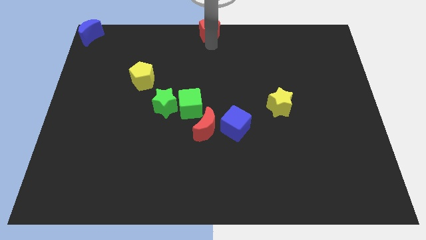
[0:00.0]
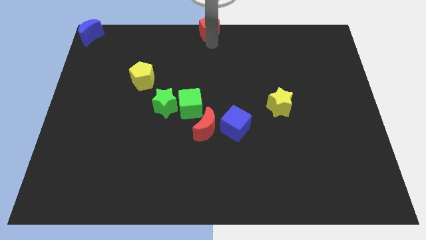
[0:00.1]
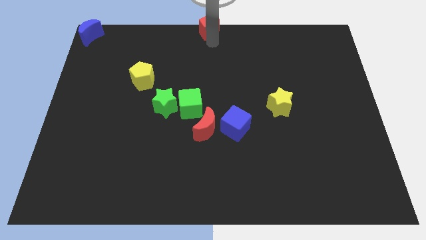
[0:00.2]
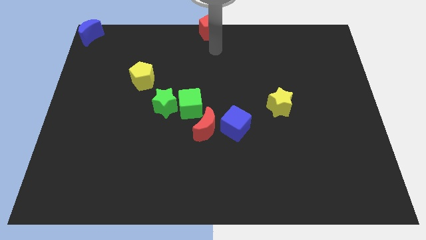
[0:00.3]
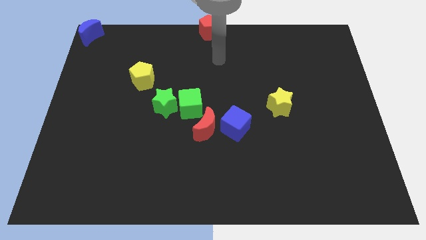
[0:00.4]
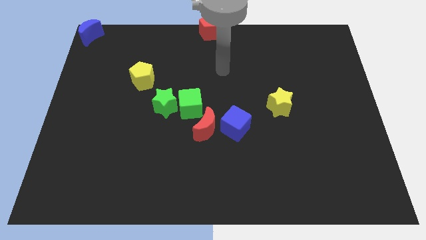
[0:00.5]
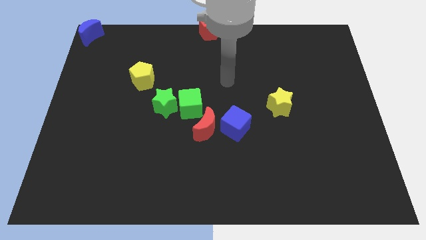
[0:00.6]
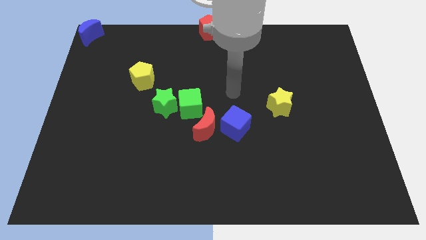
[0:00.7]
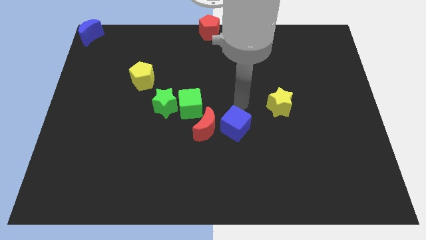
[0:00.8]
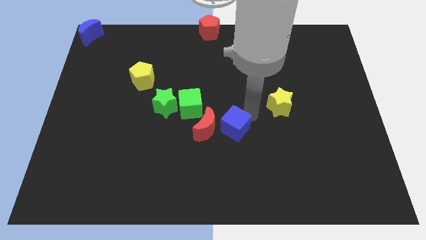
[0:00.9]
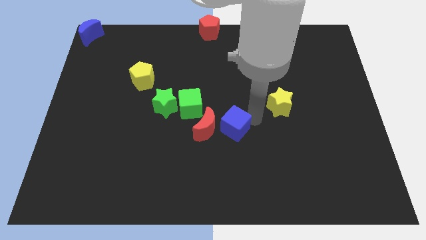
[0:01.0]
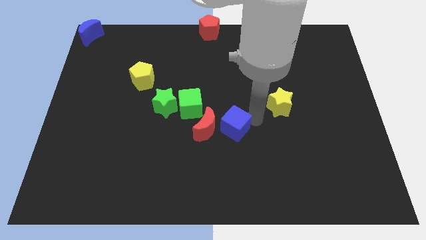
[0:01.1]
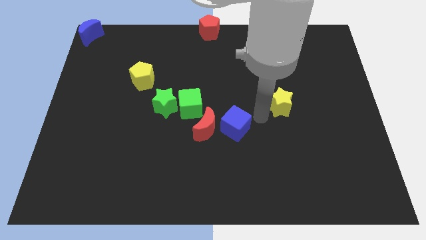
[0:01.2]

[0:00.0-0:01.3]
place the arm to the left of the yellow star

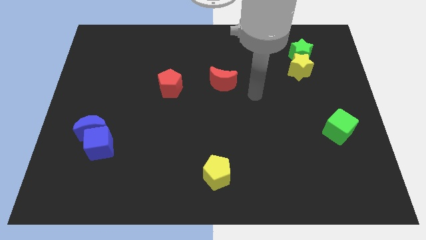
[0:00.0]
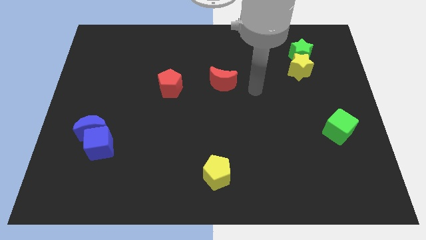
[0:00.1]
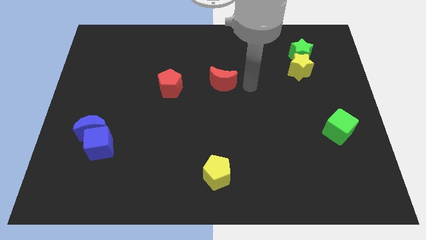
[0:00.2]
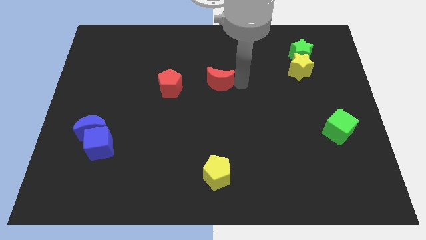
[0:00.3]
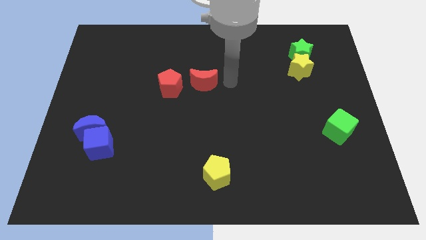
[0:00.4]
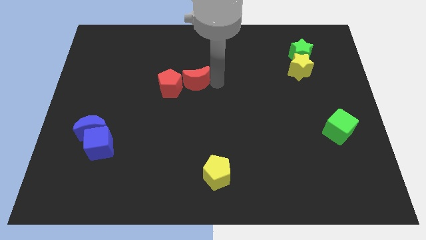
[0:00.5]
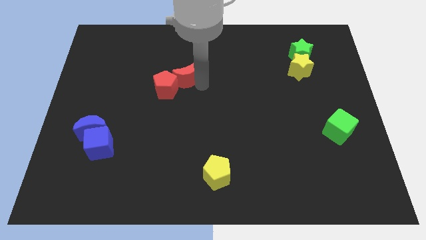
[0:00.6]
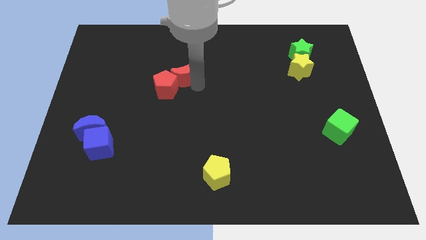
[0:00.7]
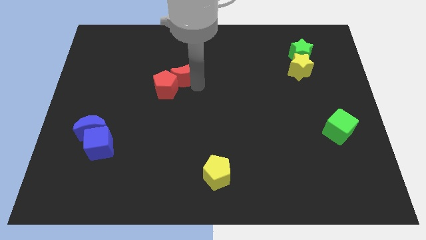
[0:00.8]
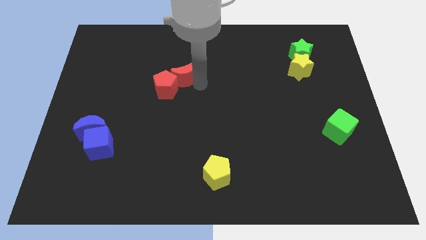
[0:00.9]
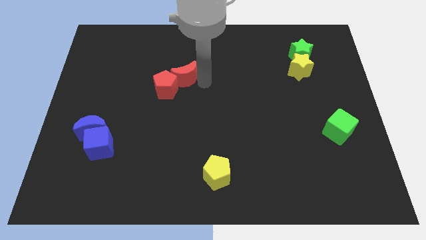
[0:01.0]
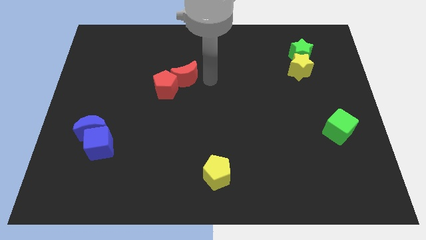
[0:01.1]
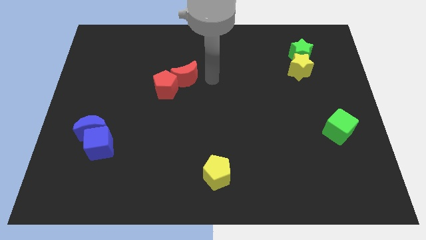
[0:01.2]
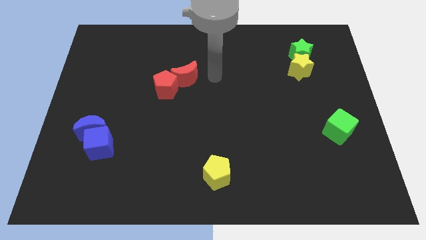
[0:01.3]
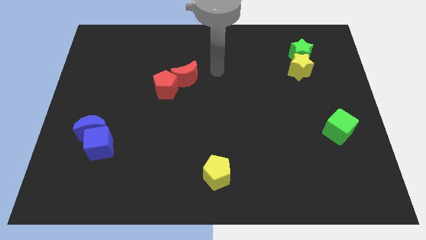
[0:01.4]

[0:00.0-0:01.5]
push the red crescent into the red pentagon

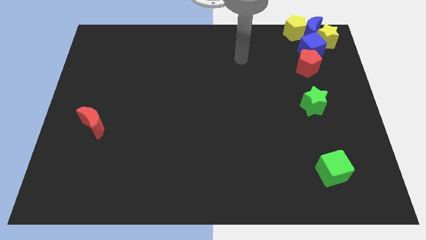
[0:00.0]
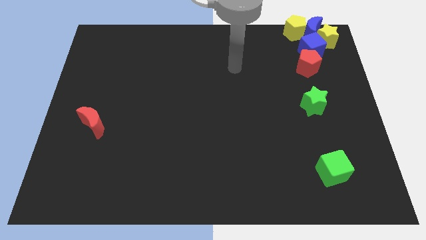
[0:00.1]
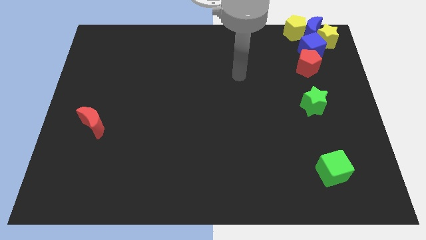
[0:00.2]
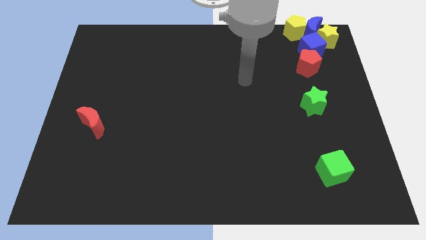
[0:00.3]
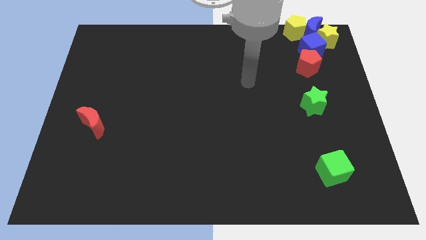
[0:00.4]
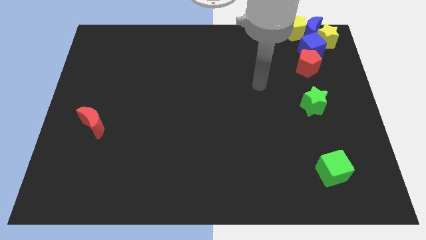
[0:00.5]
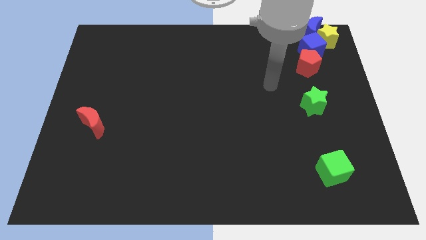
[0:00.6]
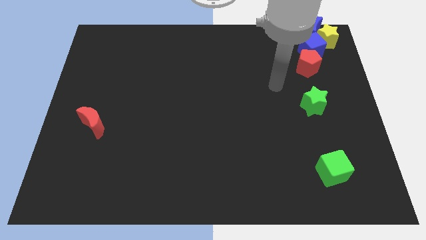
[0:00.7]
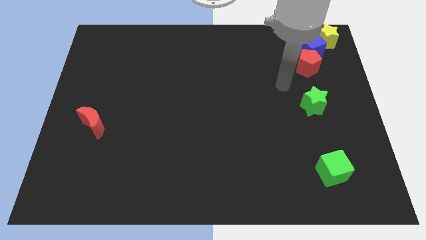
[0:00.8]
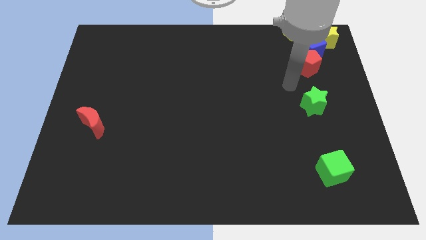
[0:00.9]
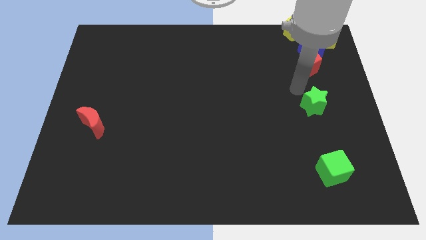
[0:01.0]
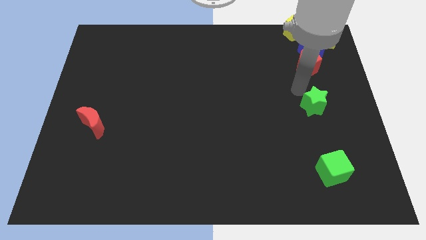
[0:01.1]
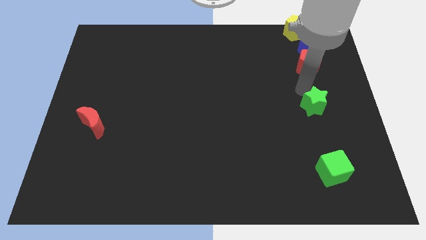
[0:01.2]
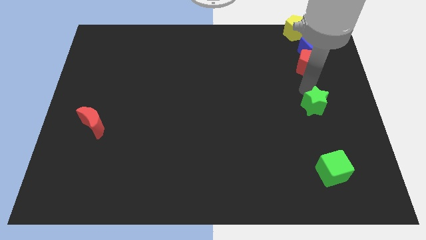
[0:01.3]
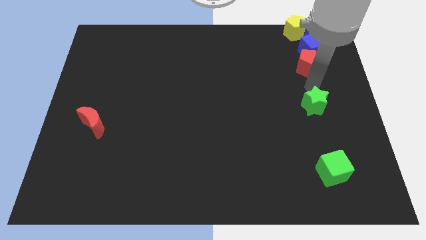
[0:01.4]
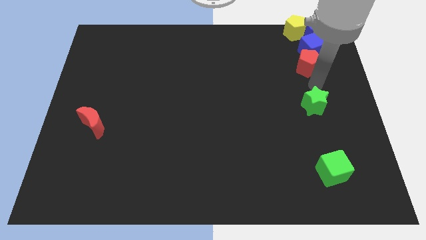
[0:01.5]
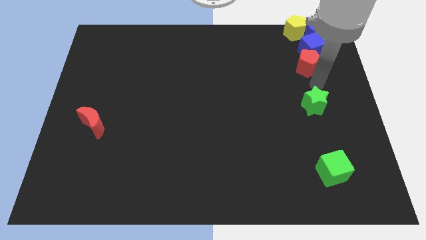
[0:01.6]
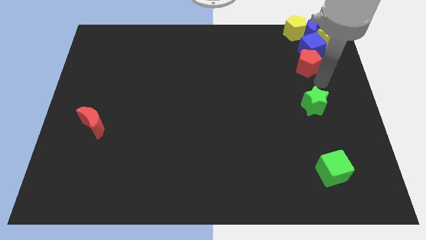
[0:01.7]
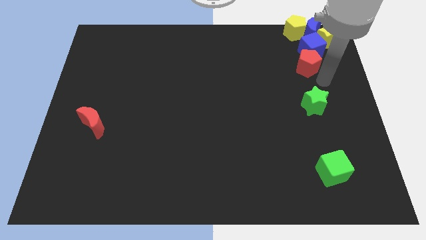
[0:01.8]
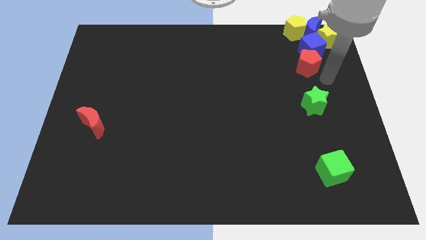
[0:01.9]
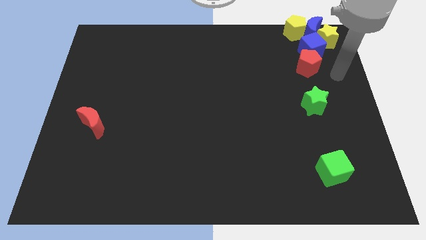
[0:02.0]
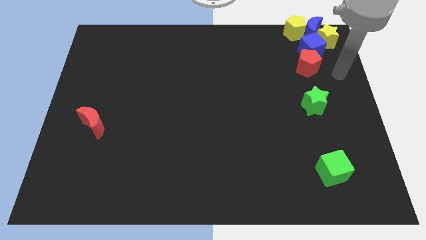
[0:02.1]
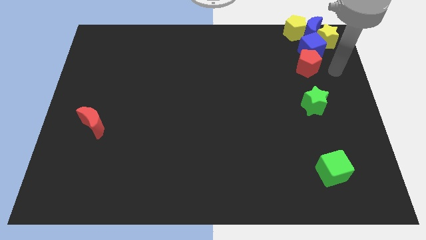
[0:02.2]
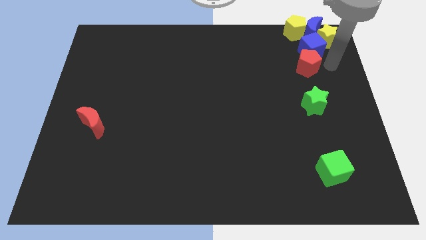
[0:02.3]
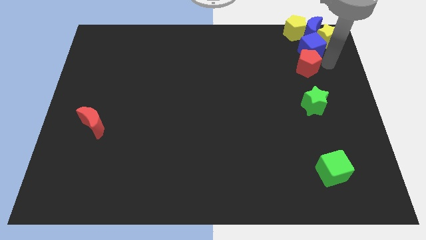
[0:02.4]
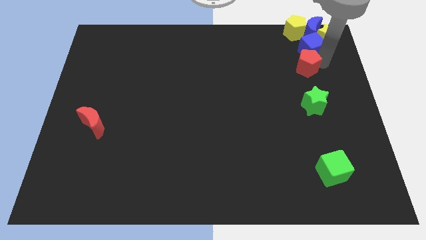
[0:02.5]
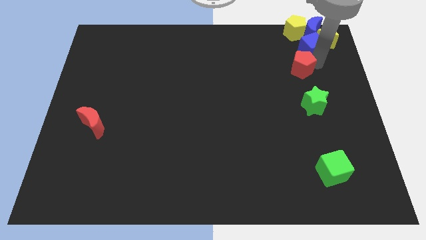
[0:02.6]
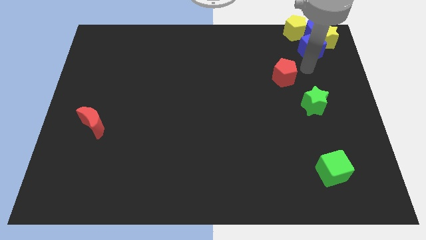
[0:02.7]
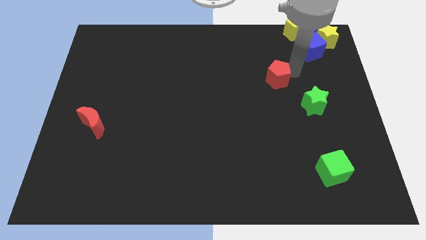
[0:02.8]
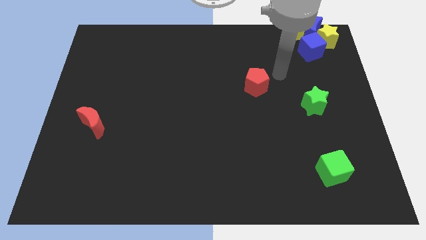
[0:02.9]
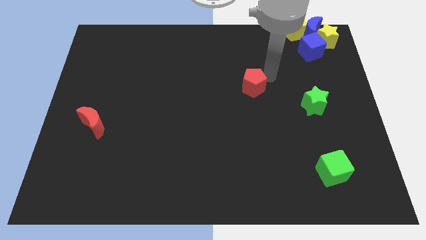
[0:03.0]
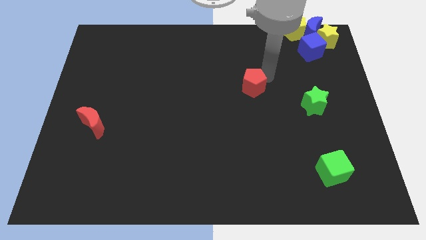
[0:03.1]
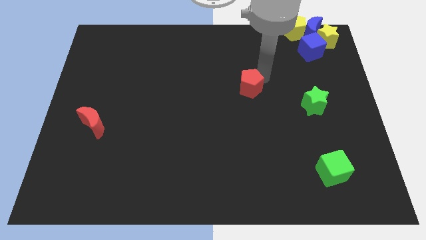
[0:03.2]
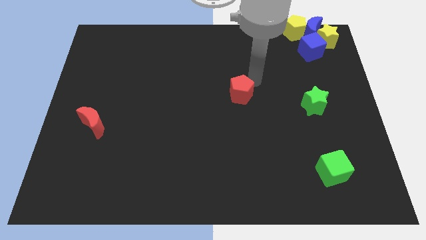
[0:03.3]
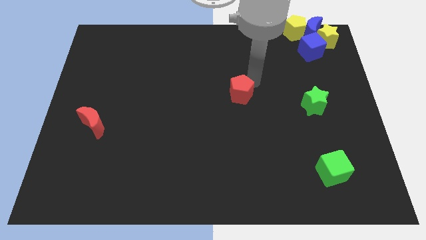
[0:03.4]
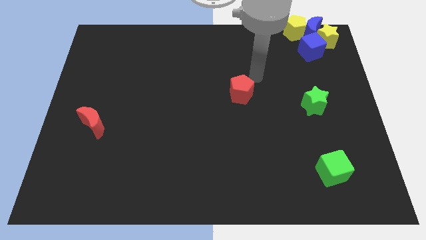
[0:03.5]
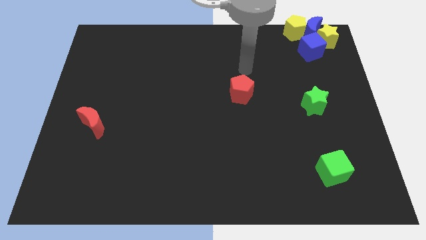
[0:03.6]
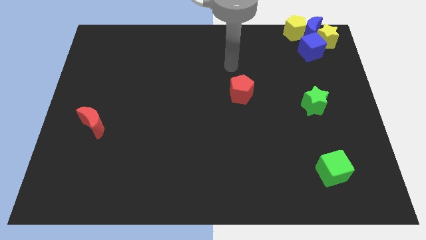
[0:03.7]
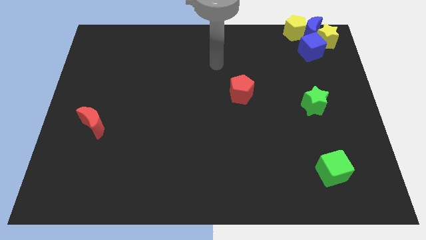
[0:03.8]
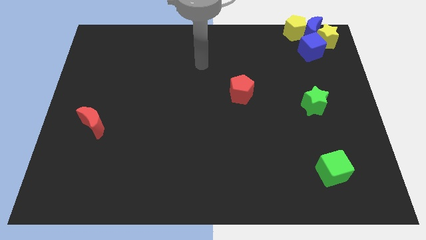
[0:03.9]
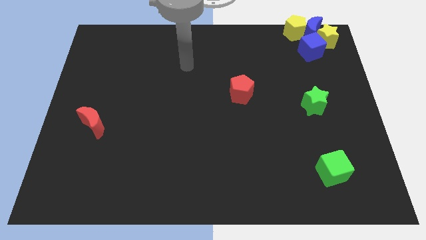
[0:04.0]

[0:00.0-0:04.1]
separate the red pentagon and the blue cube

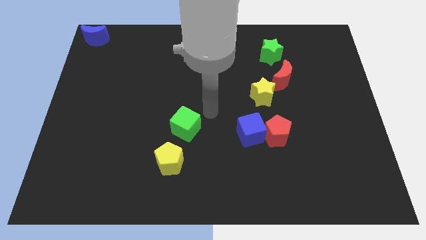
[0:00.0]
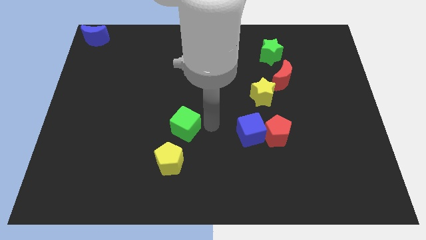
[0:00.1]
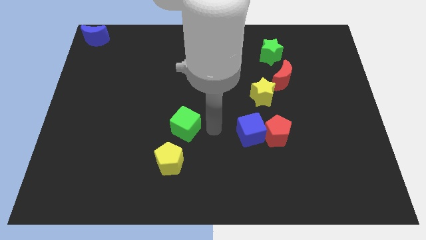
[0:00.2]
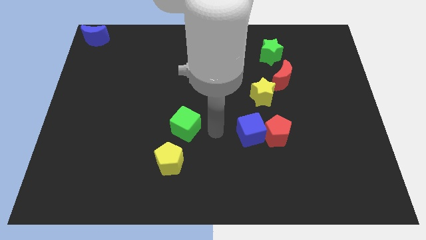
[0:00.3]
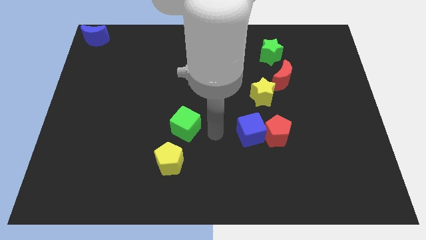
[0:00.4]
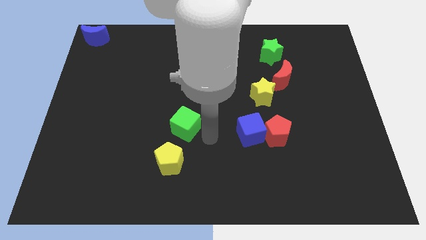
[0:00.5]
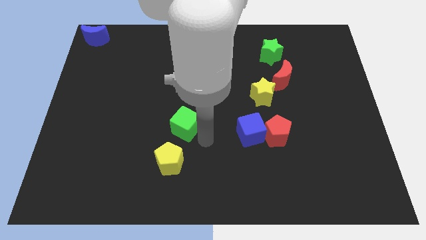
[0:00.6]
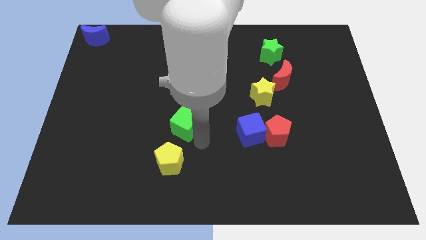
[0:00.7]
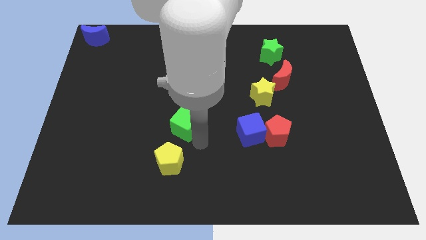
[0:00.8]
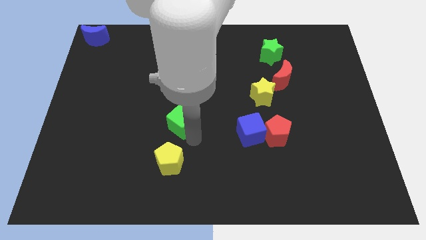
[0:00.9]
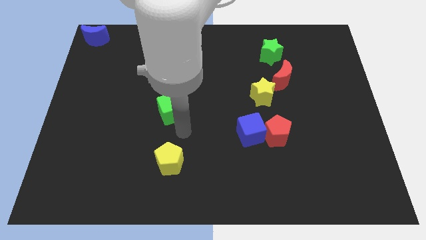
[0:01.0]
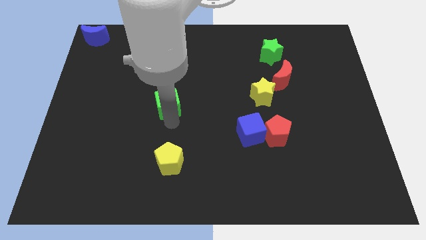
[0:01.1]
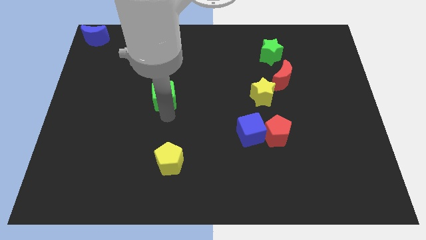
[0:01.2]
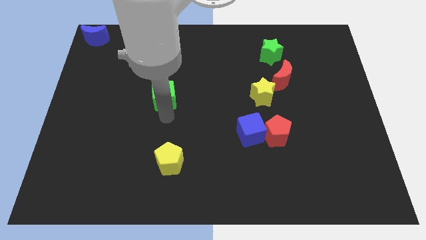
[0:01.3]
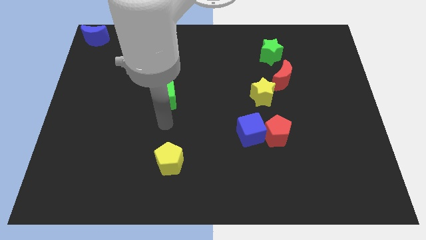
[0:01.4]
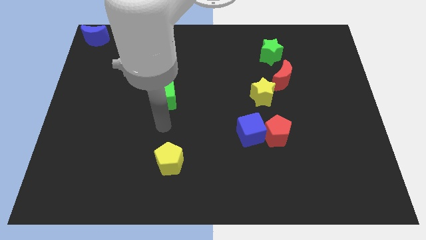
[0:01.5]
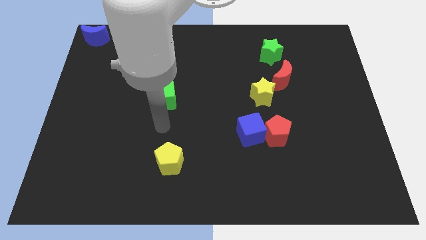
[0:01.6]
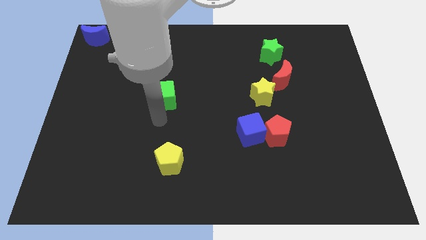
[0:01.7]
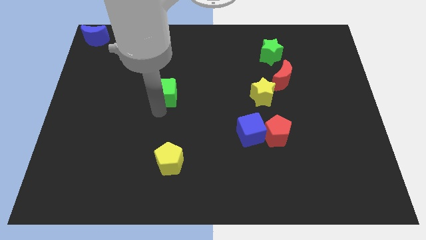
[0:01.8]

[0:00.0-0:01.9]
place green cube to the top of the yellow pentagon

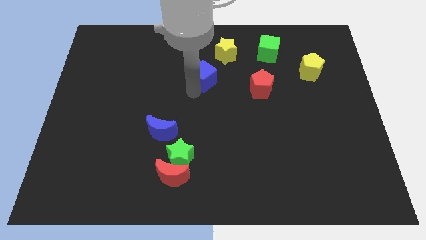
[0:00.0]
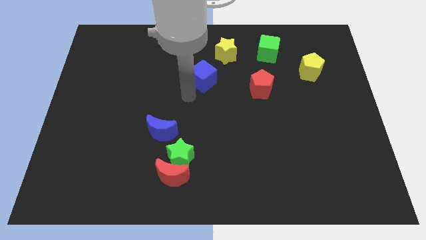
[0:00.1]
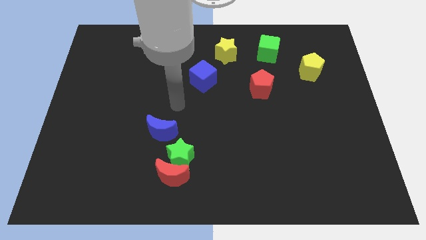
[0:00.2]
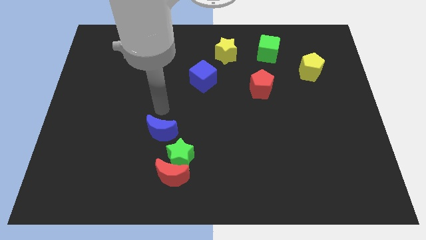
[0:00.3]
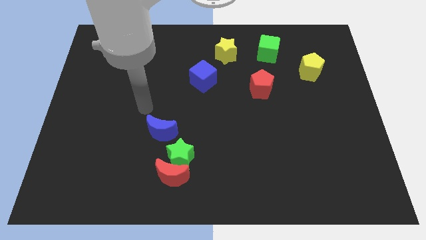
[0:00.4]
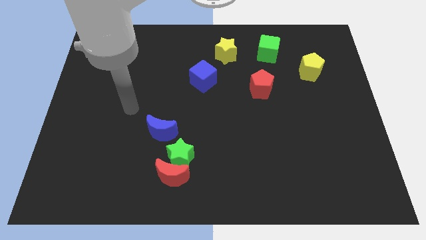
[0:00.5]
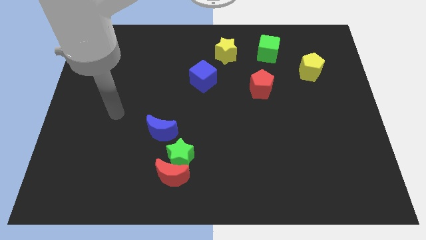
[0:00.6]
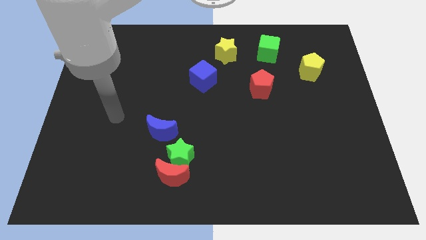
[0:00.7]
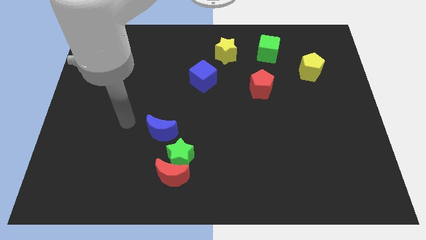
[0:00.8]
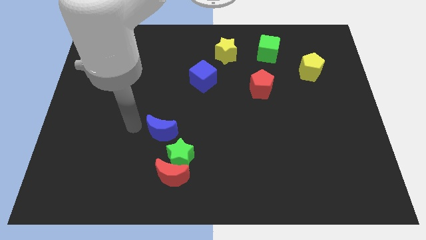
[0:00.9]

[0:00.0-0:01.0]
move your arm away from the blue cube
